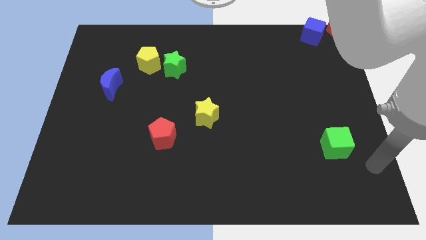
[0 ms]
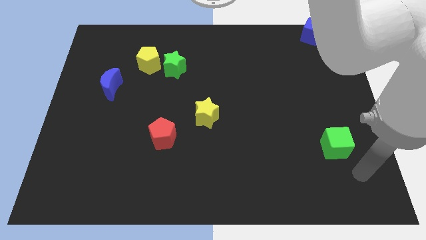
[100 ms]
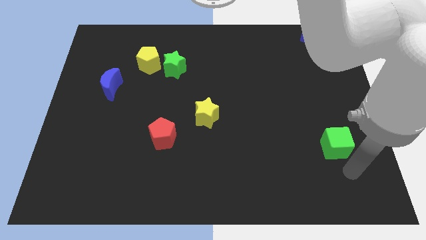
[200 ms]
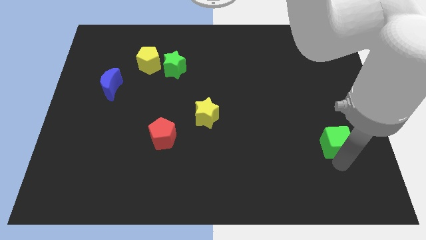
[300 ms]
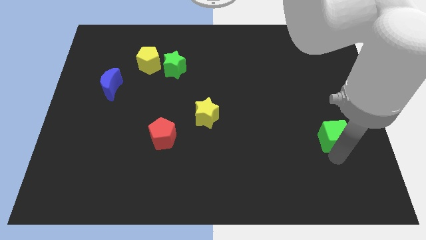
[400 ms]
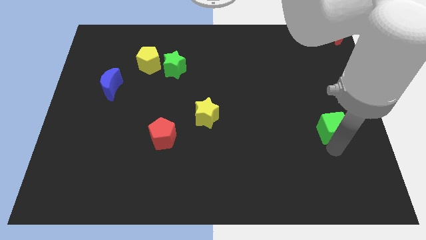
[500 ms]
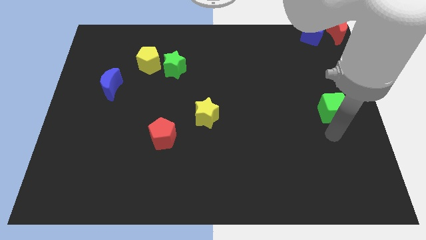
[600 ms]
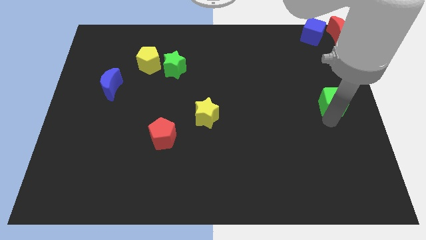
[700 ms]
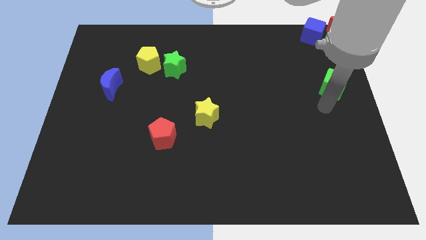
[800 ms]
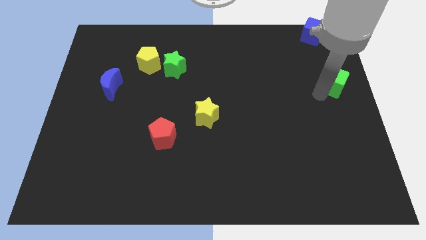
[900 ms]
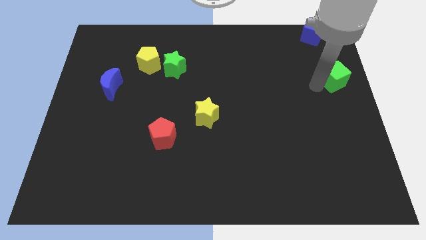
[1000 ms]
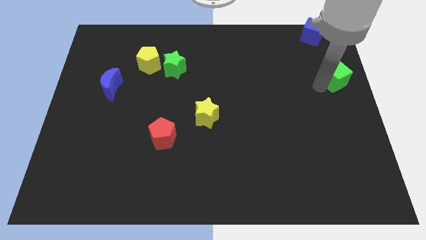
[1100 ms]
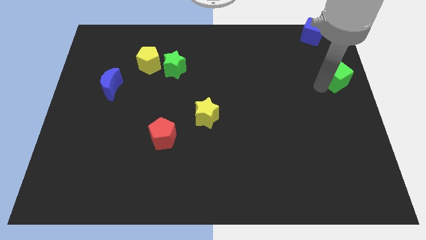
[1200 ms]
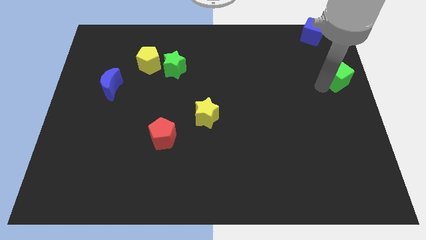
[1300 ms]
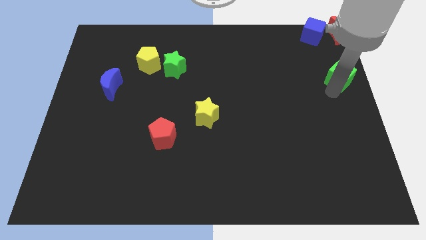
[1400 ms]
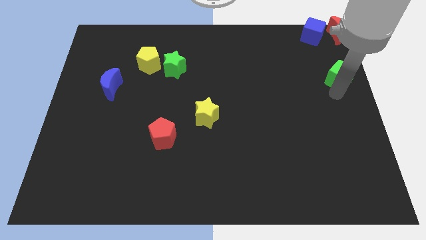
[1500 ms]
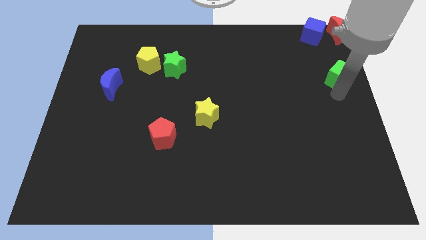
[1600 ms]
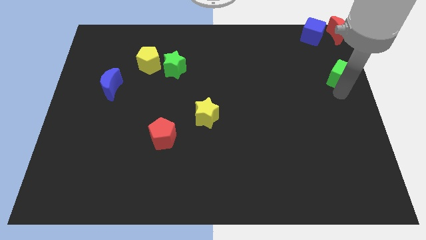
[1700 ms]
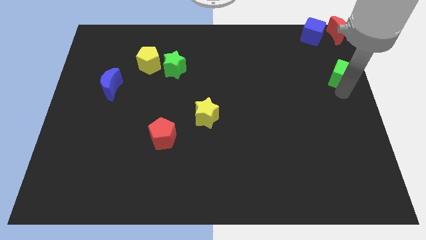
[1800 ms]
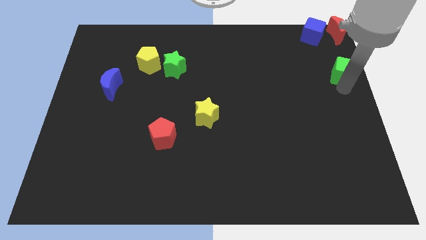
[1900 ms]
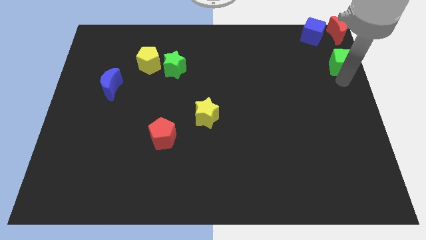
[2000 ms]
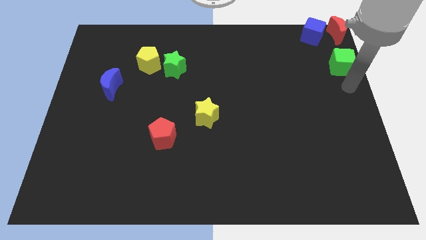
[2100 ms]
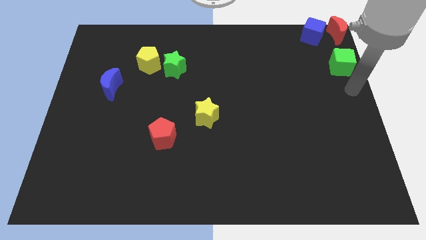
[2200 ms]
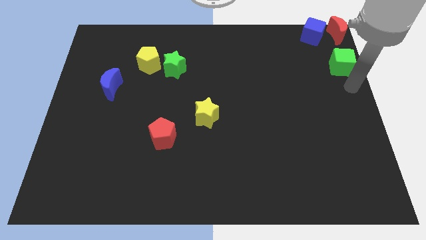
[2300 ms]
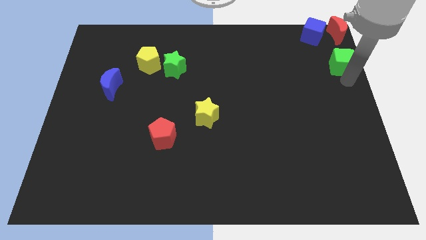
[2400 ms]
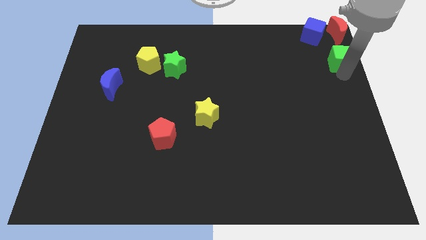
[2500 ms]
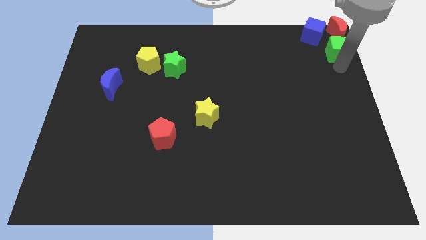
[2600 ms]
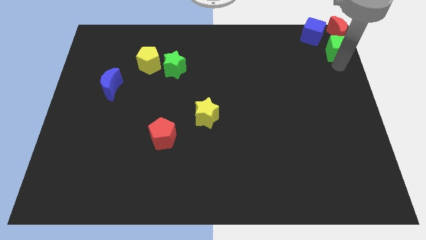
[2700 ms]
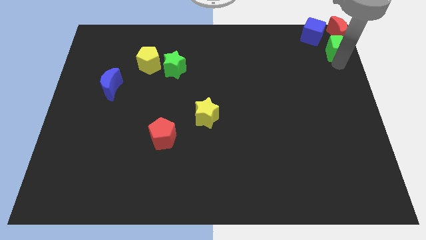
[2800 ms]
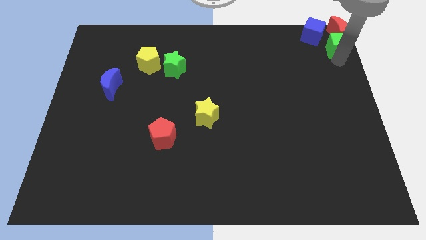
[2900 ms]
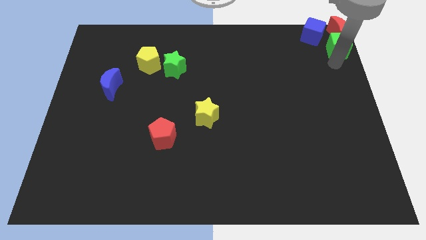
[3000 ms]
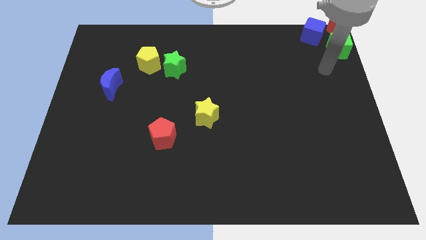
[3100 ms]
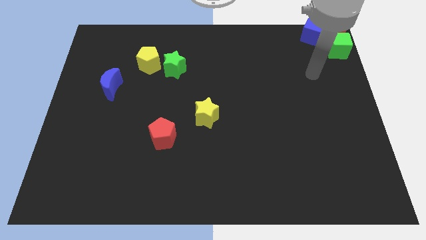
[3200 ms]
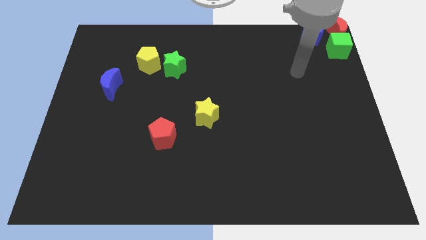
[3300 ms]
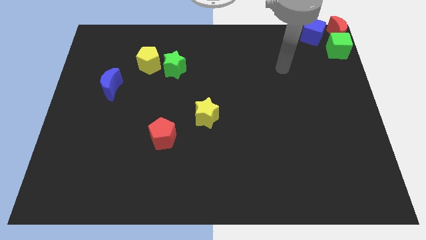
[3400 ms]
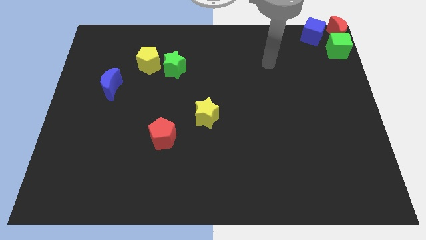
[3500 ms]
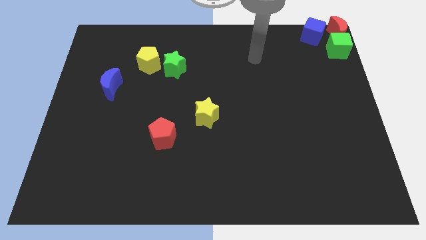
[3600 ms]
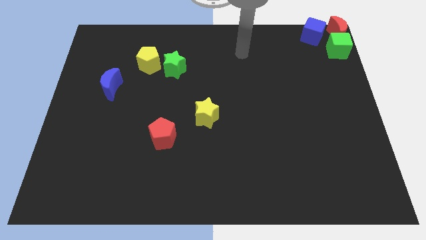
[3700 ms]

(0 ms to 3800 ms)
place green cube at the bottom of red moon

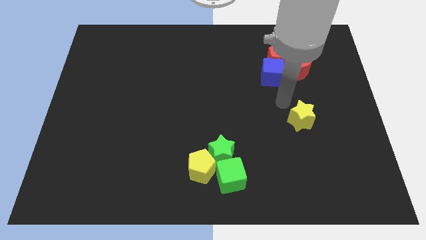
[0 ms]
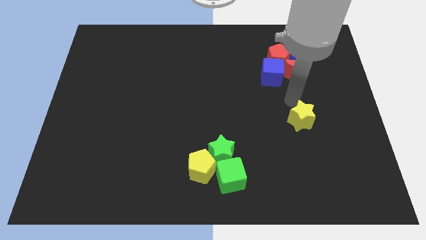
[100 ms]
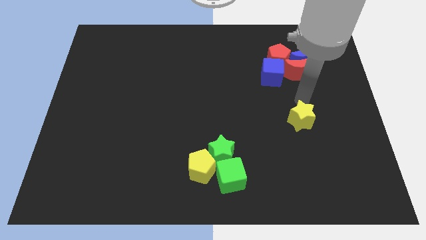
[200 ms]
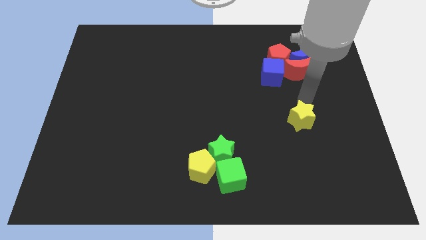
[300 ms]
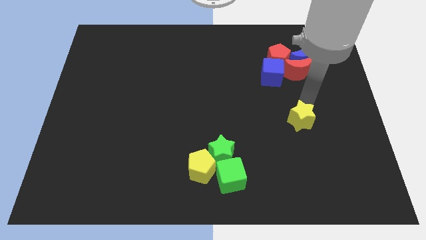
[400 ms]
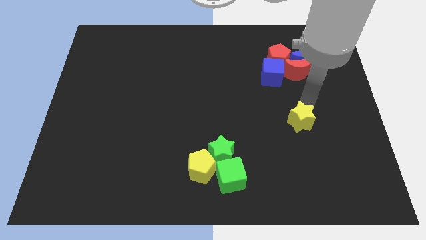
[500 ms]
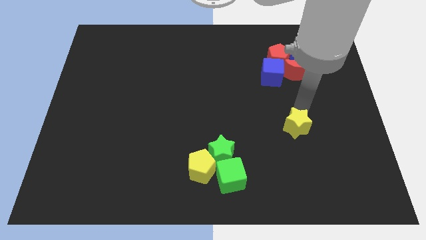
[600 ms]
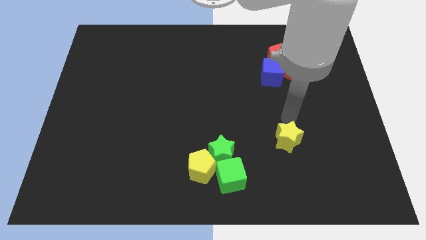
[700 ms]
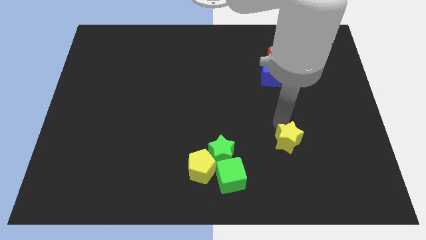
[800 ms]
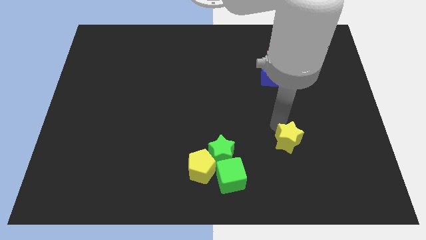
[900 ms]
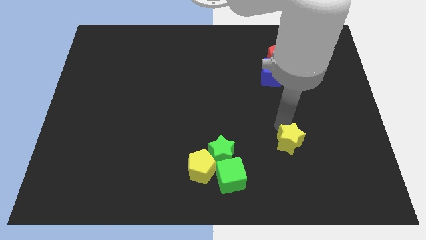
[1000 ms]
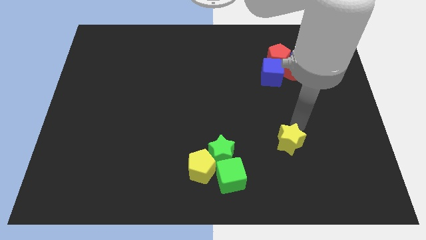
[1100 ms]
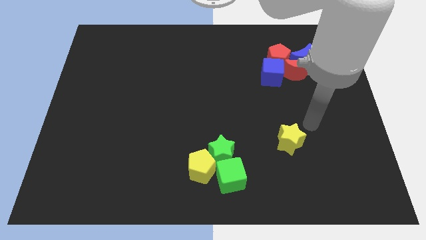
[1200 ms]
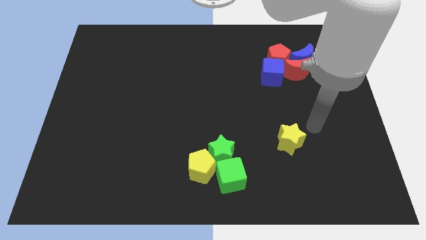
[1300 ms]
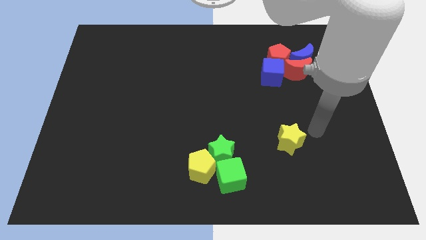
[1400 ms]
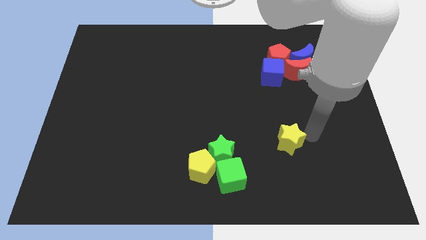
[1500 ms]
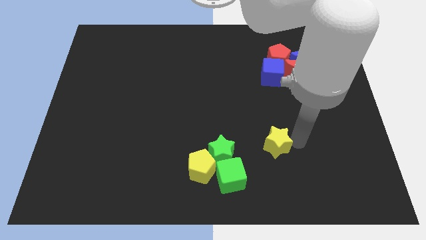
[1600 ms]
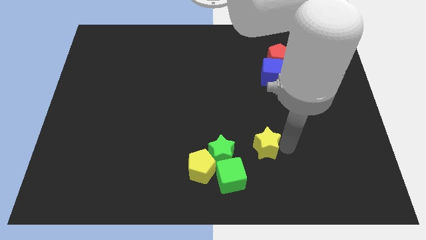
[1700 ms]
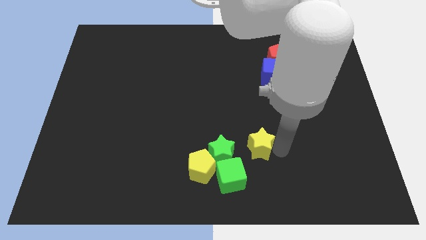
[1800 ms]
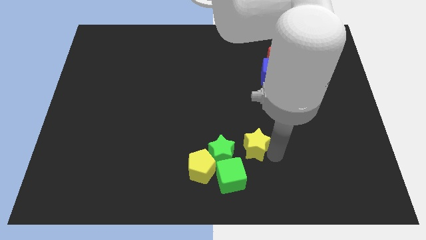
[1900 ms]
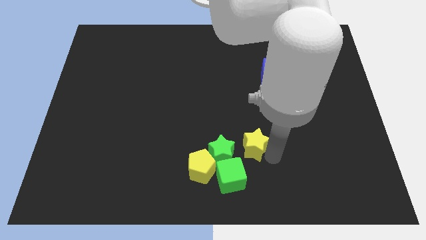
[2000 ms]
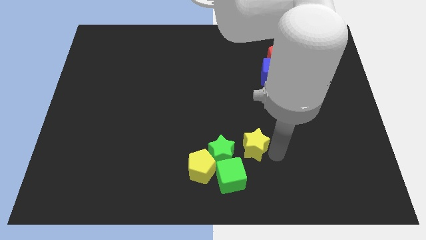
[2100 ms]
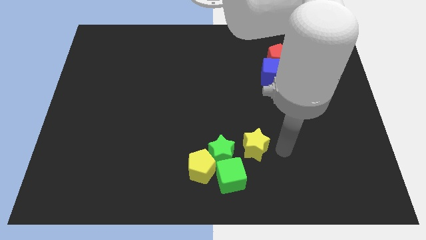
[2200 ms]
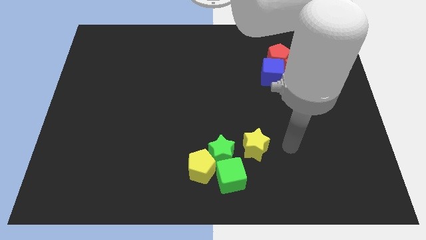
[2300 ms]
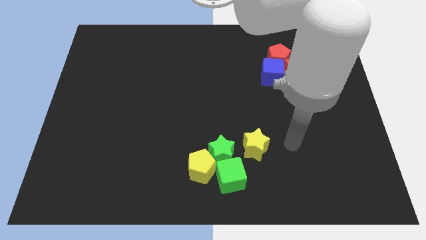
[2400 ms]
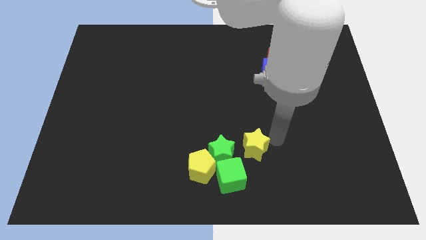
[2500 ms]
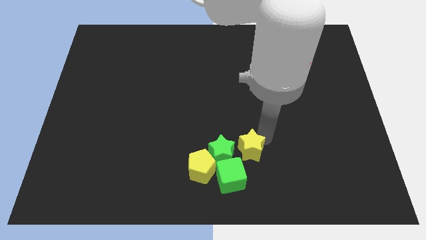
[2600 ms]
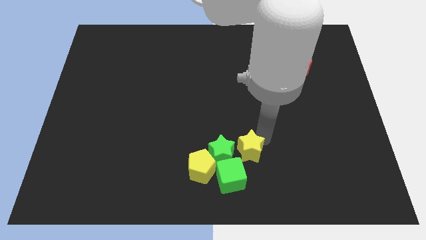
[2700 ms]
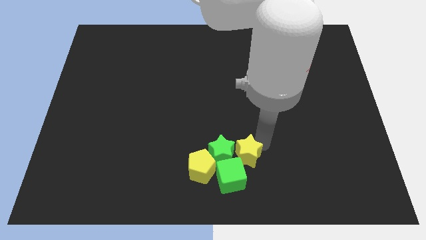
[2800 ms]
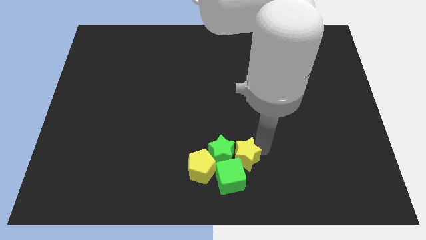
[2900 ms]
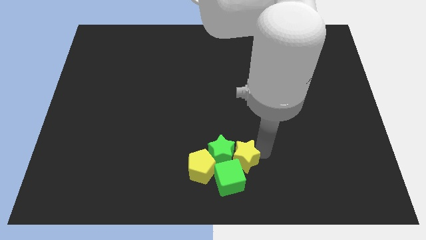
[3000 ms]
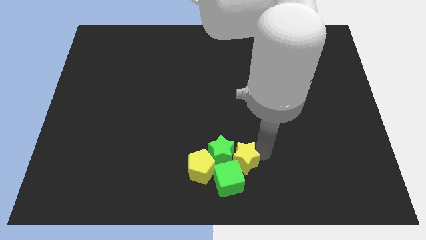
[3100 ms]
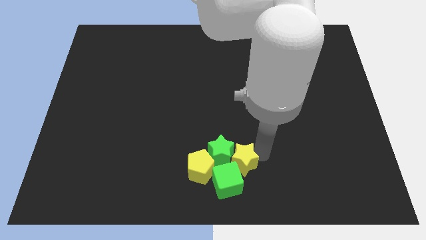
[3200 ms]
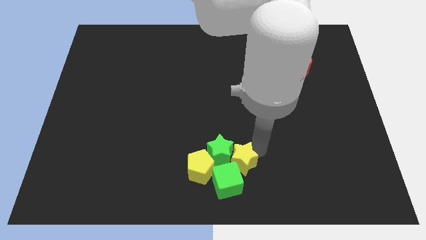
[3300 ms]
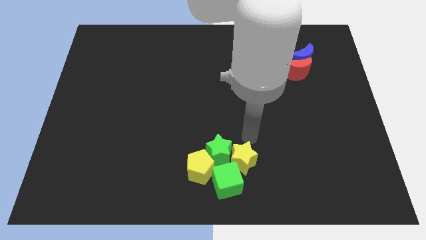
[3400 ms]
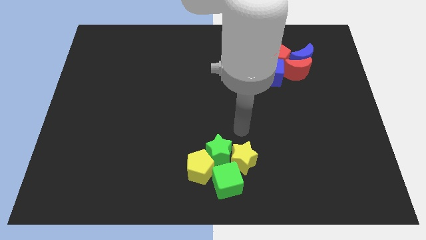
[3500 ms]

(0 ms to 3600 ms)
drag yellow star adjacent to the green blocks to form a group of blocks

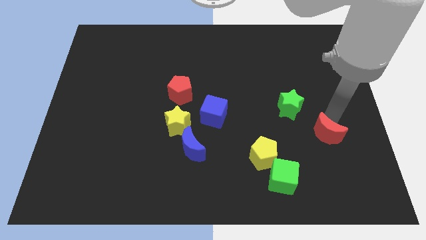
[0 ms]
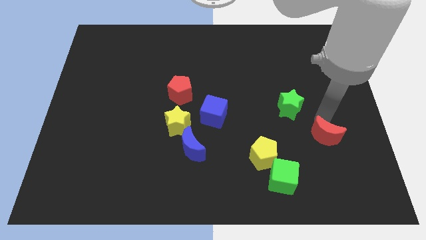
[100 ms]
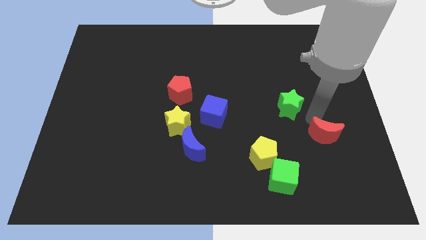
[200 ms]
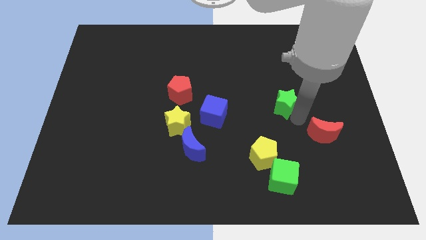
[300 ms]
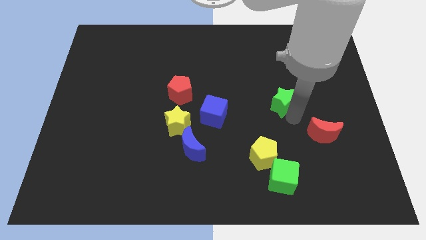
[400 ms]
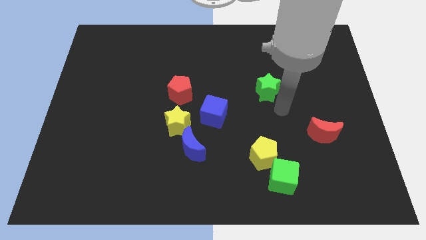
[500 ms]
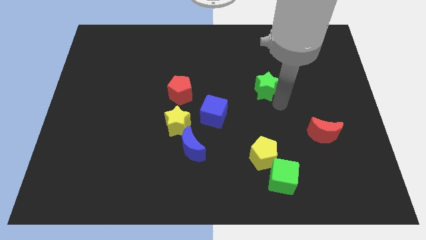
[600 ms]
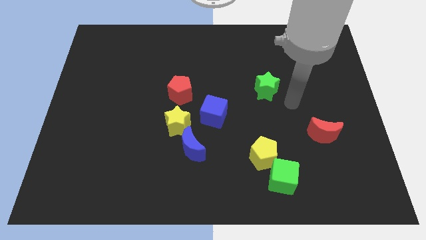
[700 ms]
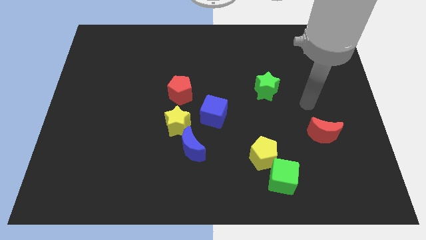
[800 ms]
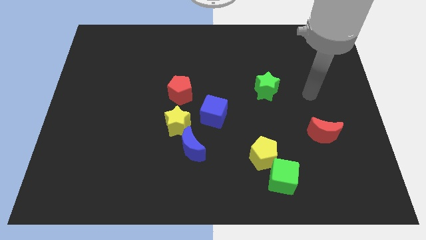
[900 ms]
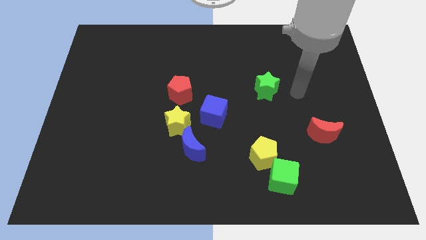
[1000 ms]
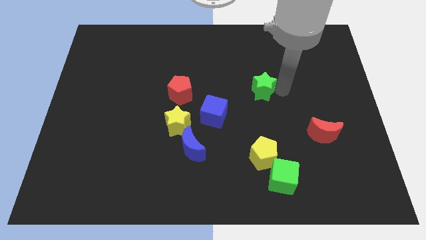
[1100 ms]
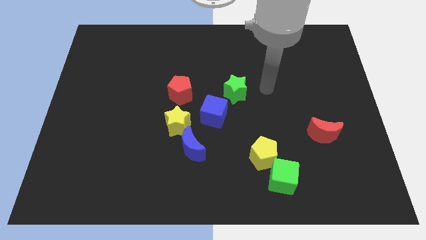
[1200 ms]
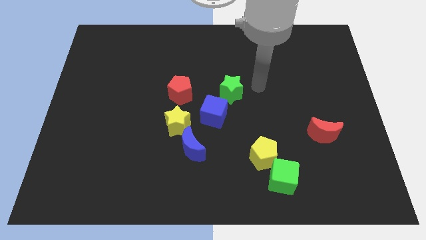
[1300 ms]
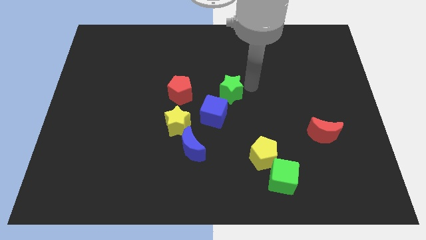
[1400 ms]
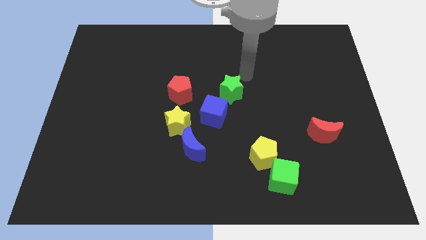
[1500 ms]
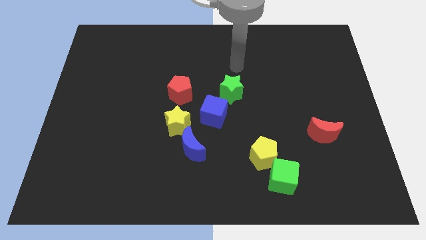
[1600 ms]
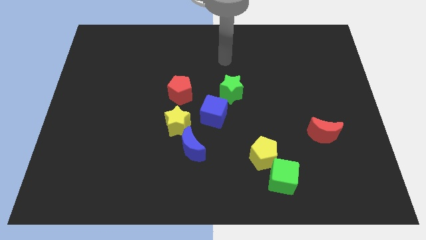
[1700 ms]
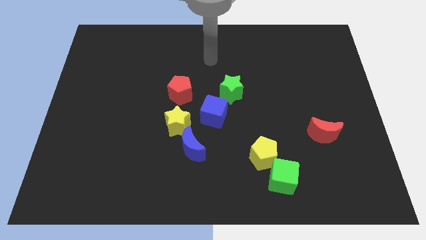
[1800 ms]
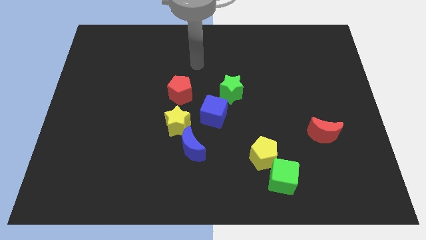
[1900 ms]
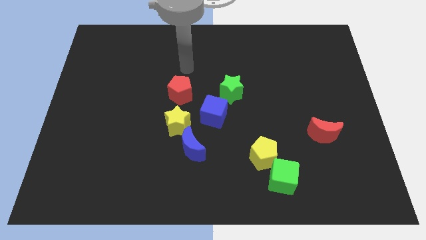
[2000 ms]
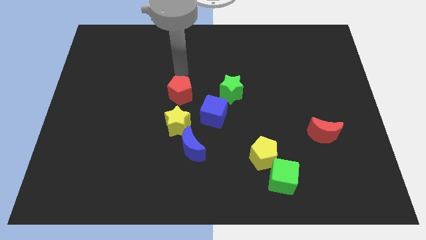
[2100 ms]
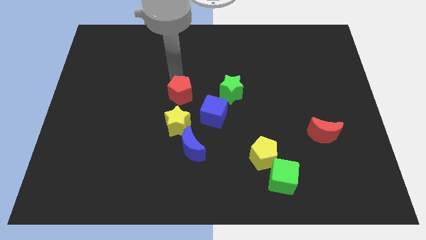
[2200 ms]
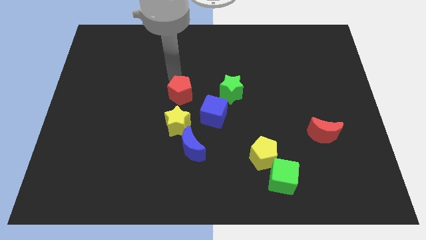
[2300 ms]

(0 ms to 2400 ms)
place the green star to the right of the red pentagon
